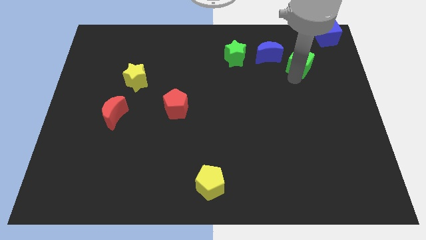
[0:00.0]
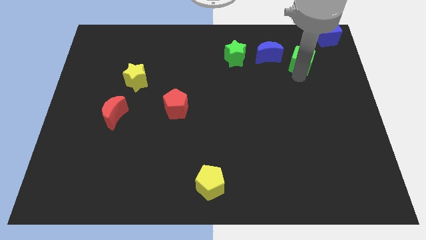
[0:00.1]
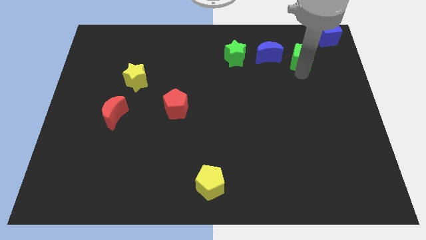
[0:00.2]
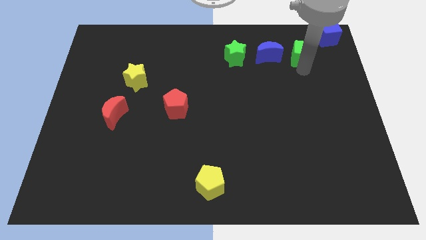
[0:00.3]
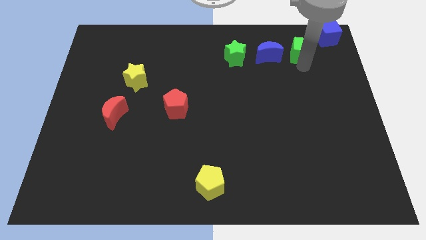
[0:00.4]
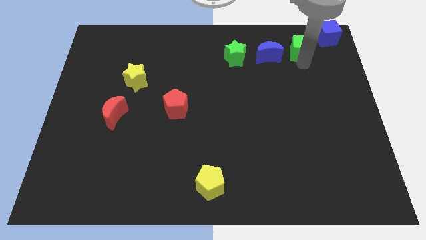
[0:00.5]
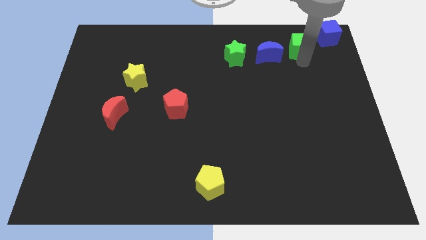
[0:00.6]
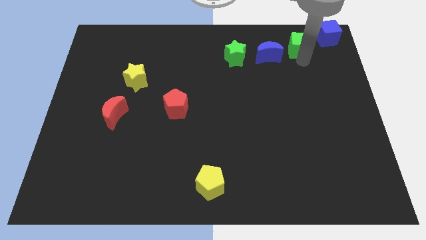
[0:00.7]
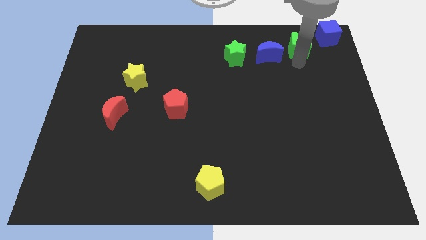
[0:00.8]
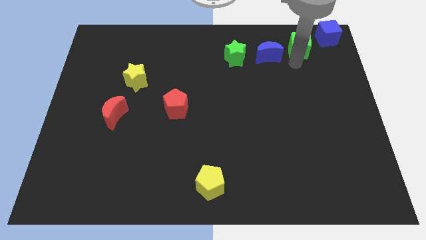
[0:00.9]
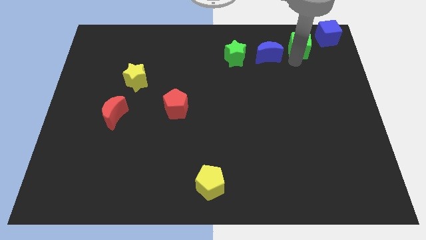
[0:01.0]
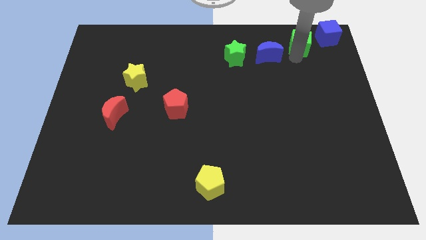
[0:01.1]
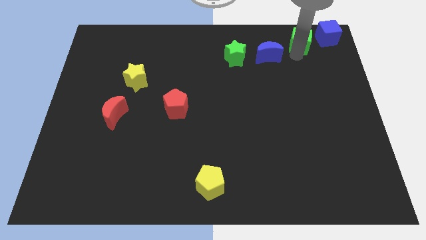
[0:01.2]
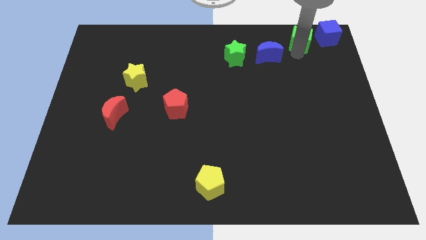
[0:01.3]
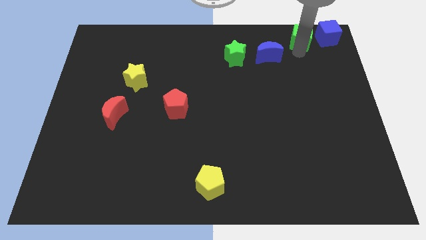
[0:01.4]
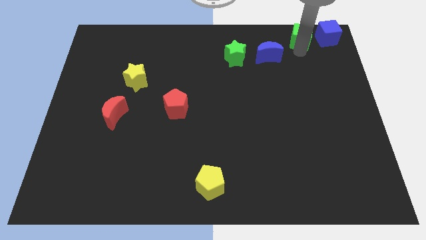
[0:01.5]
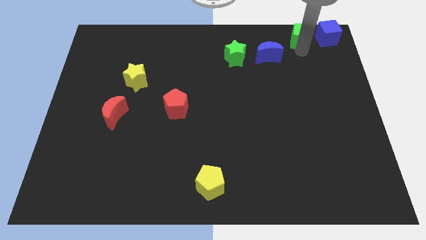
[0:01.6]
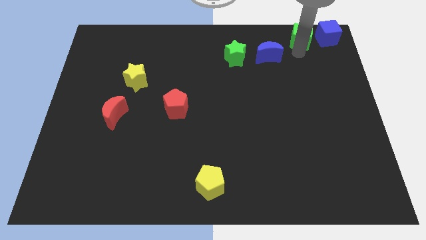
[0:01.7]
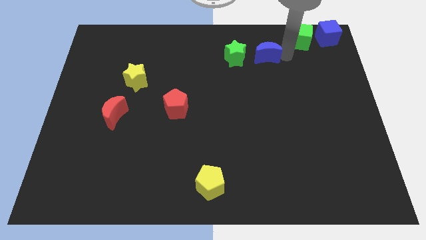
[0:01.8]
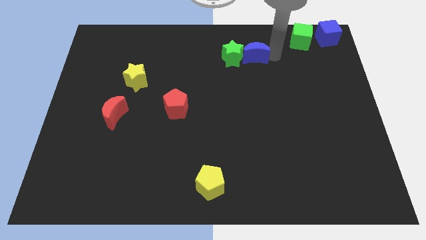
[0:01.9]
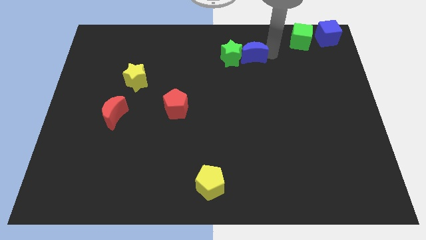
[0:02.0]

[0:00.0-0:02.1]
place green cube in between blue cube and blue moon

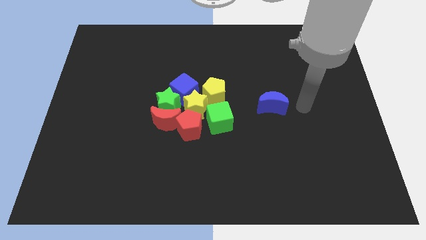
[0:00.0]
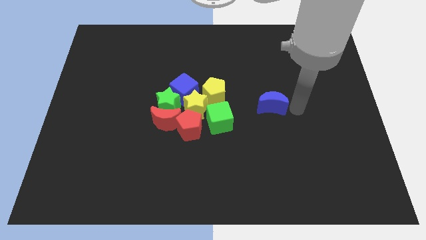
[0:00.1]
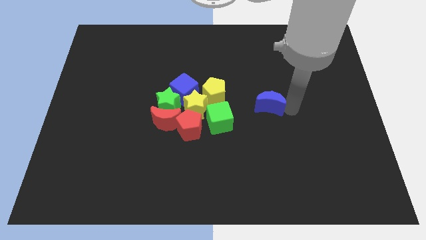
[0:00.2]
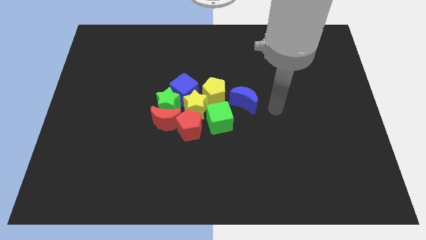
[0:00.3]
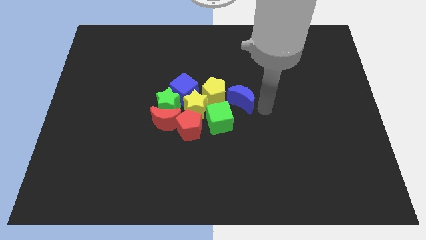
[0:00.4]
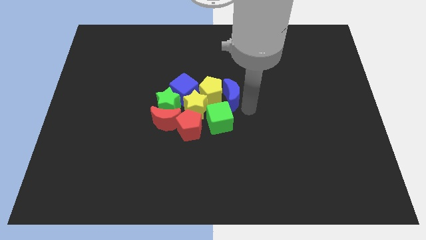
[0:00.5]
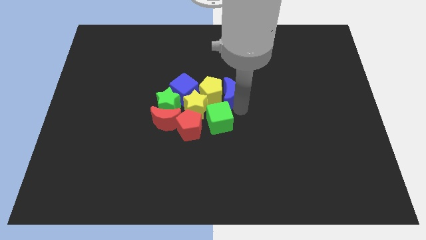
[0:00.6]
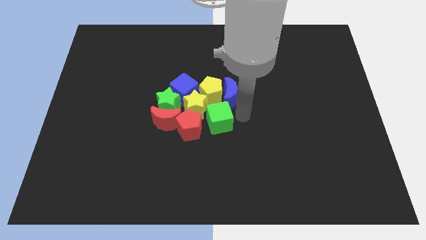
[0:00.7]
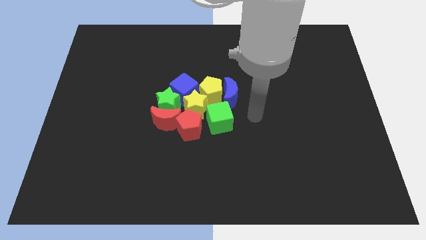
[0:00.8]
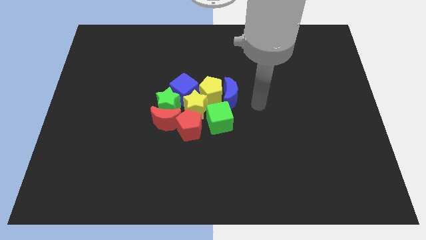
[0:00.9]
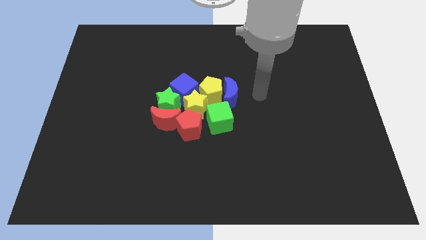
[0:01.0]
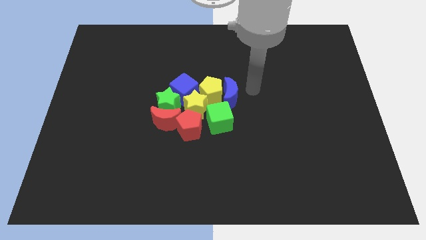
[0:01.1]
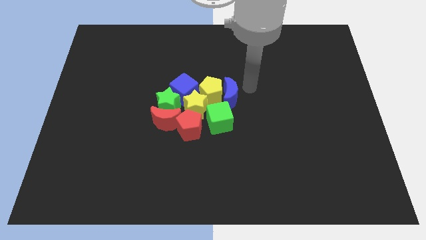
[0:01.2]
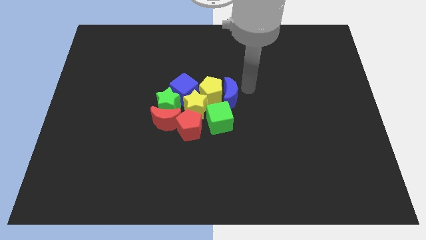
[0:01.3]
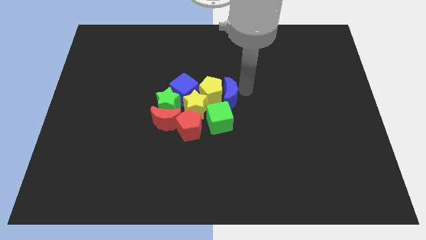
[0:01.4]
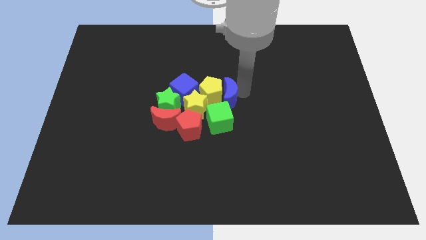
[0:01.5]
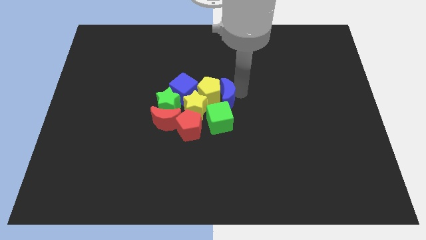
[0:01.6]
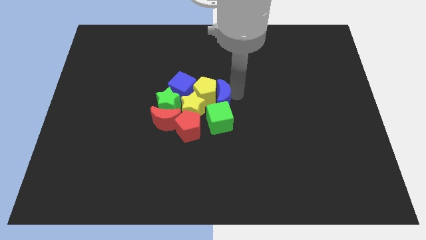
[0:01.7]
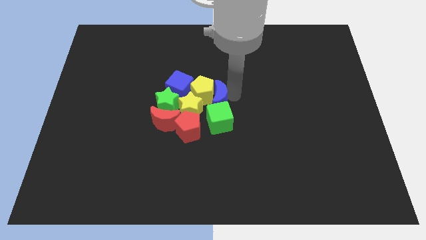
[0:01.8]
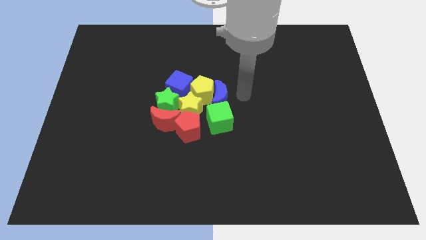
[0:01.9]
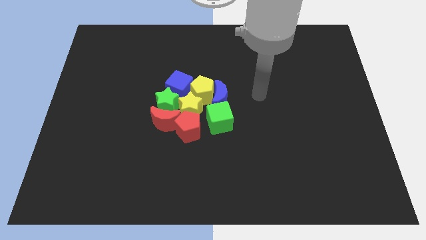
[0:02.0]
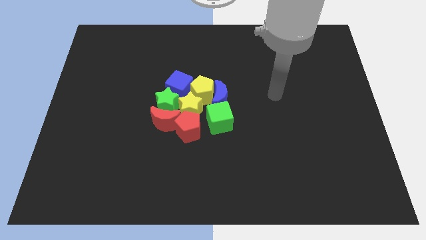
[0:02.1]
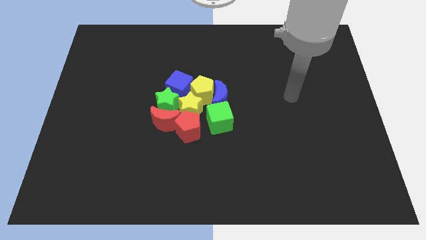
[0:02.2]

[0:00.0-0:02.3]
drag blue moon into group of blocks

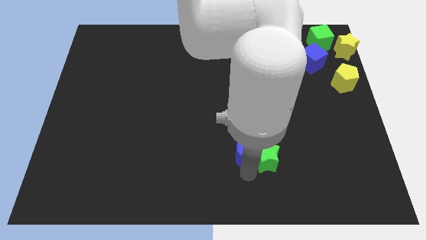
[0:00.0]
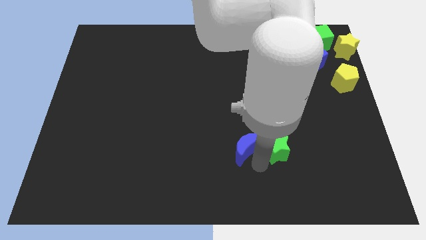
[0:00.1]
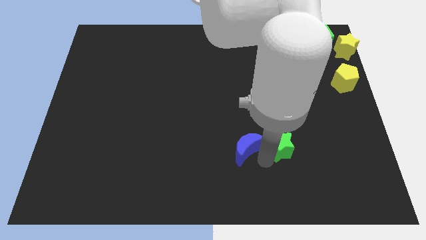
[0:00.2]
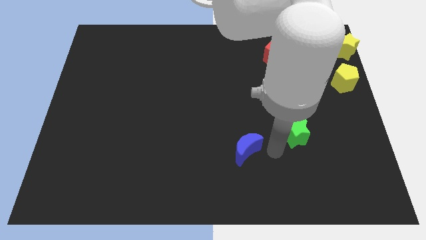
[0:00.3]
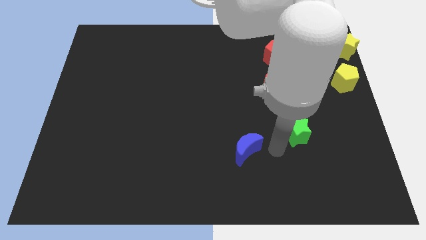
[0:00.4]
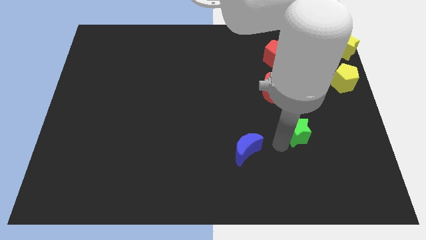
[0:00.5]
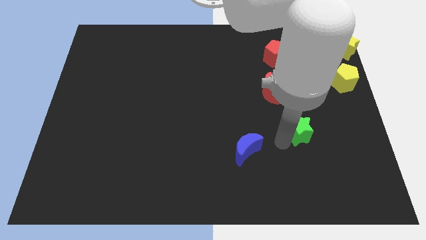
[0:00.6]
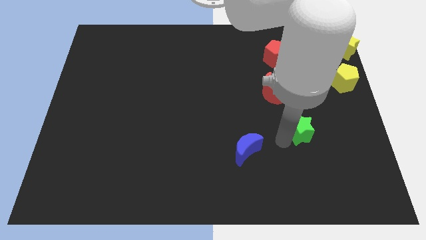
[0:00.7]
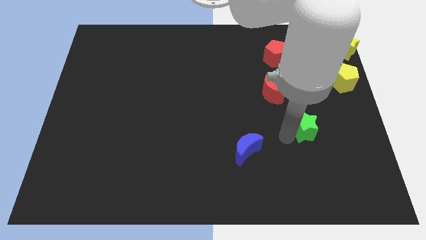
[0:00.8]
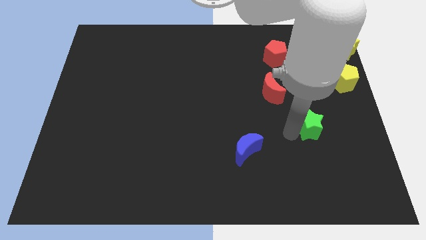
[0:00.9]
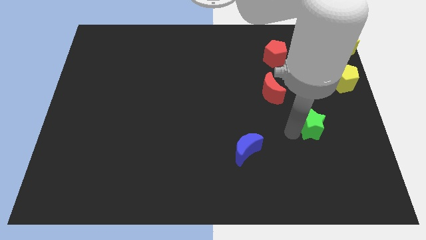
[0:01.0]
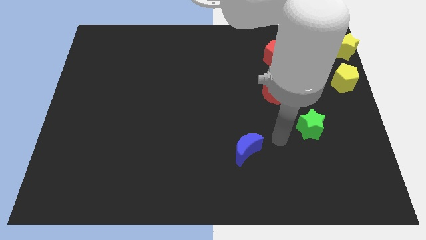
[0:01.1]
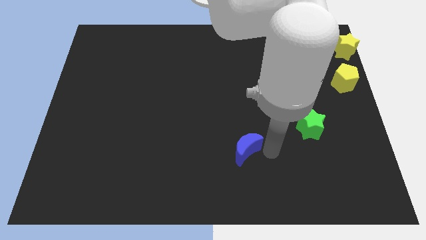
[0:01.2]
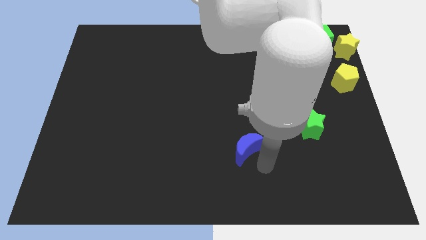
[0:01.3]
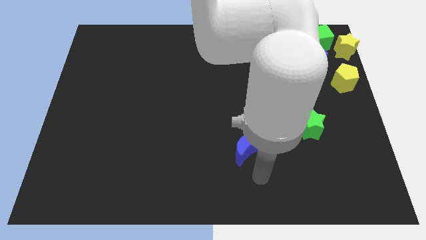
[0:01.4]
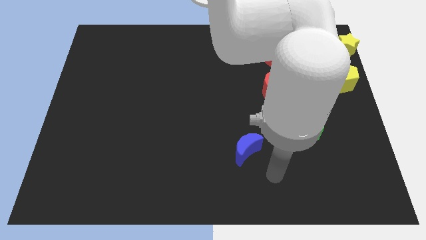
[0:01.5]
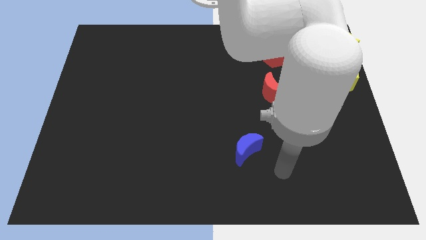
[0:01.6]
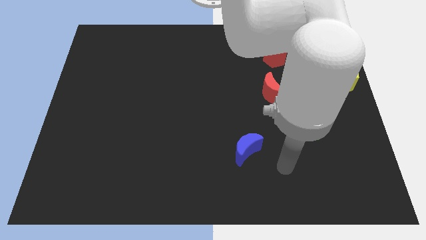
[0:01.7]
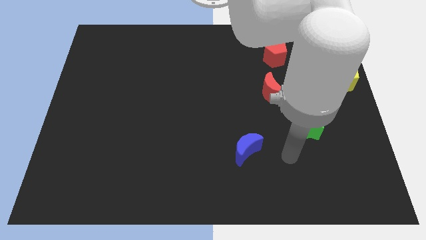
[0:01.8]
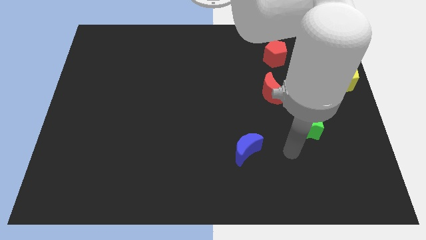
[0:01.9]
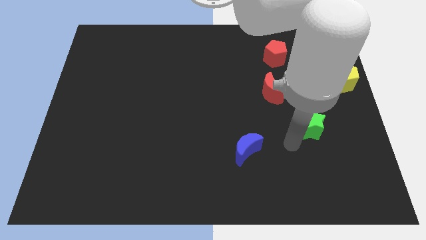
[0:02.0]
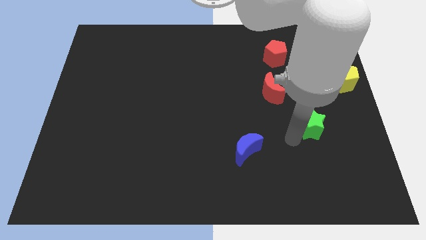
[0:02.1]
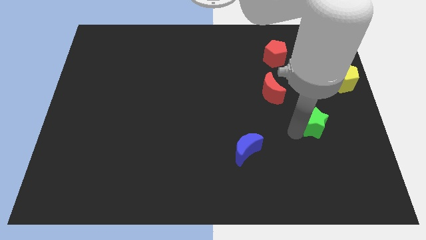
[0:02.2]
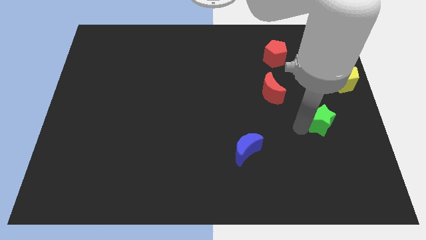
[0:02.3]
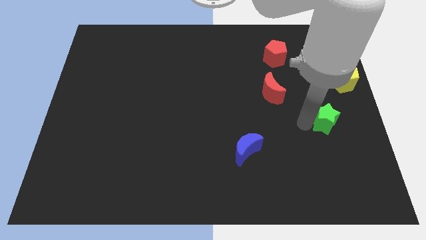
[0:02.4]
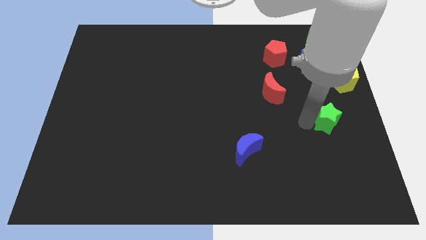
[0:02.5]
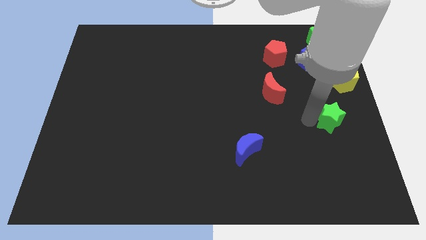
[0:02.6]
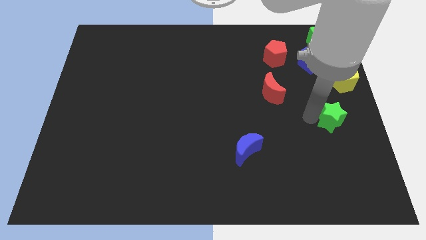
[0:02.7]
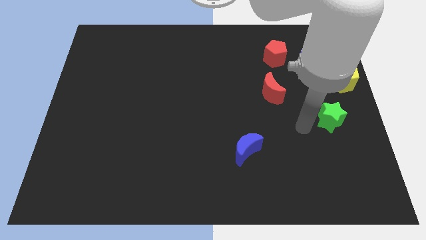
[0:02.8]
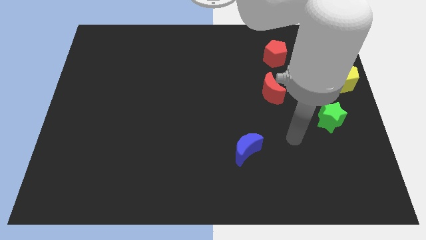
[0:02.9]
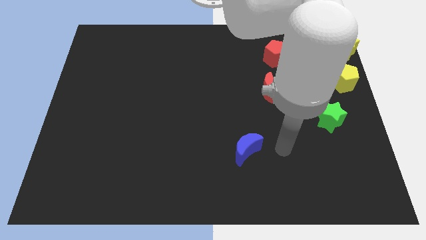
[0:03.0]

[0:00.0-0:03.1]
separate the green star from the blue moon

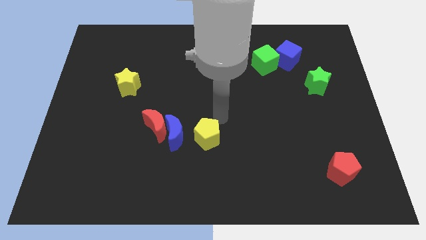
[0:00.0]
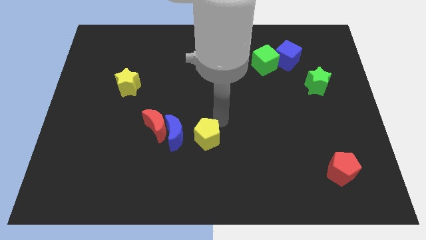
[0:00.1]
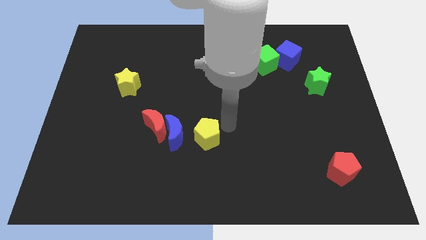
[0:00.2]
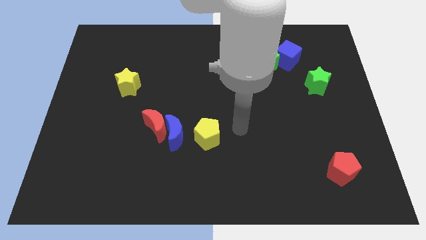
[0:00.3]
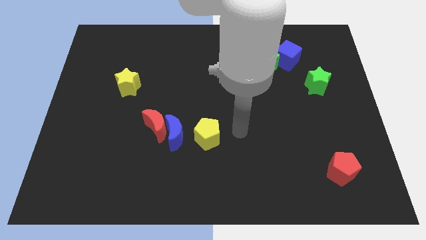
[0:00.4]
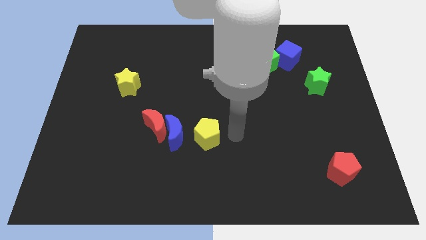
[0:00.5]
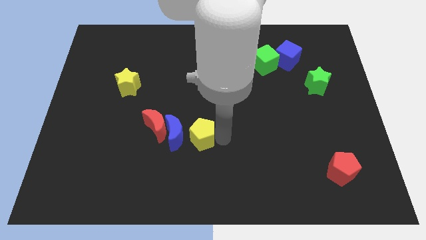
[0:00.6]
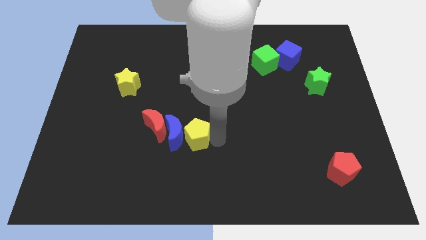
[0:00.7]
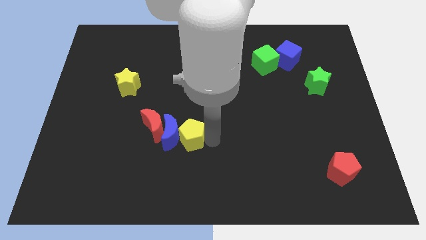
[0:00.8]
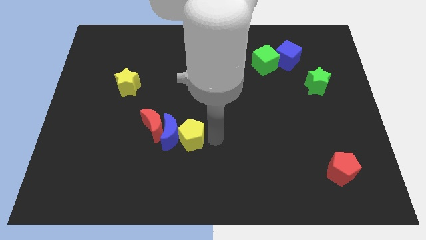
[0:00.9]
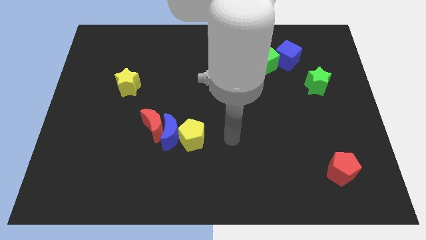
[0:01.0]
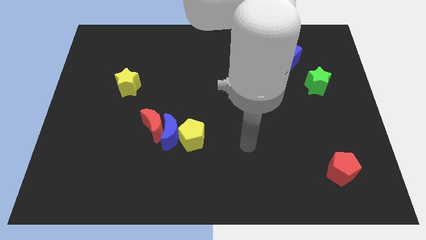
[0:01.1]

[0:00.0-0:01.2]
move yellow pentagon into the blue moon

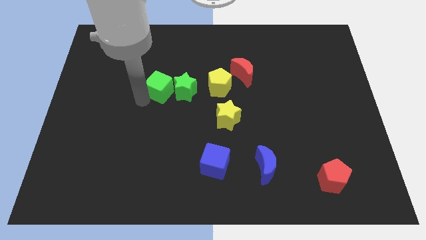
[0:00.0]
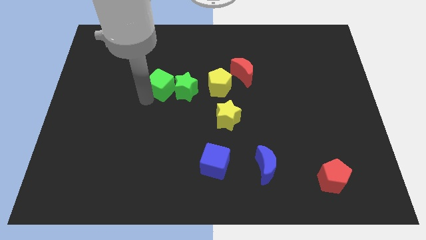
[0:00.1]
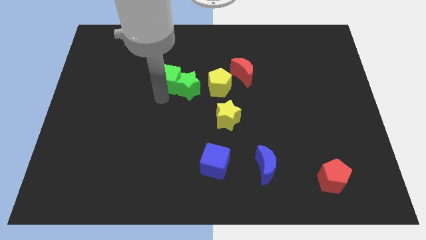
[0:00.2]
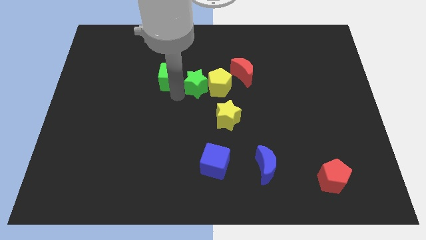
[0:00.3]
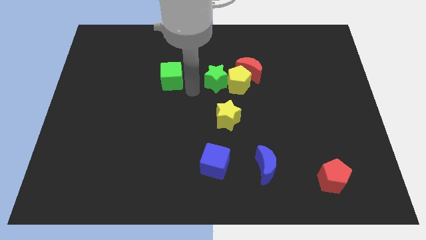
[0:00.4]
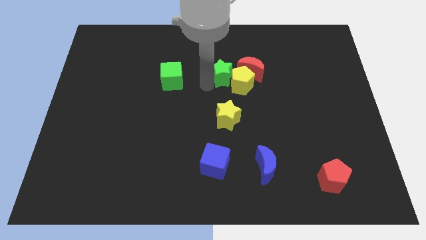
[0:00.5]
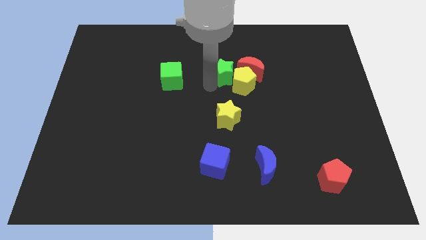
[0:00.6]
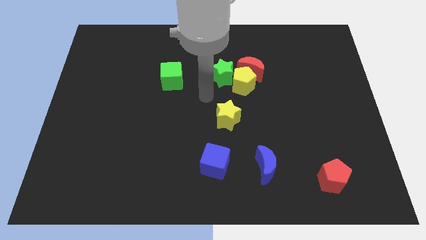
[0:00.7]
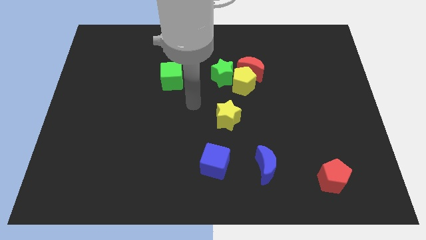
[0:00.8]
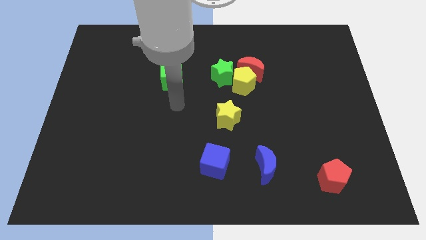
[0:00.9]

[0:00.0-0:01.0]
push green star into the yellow pentagon
